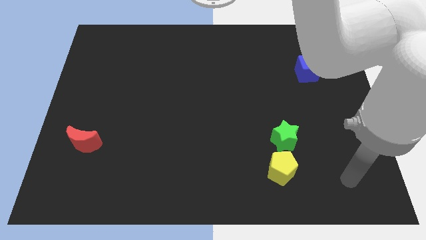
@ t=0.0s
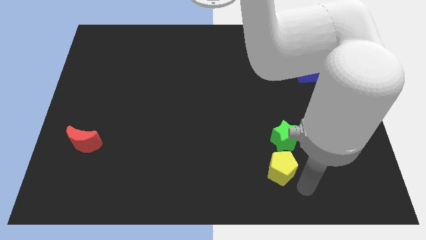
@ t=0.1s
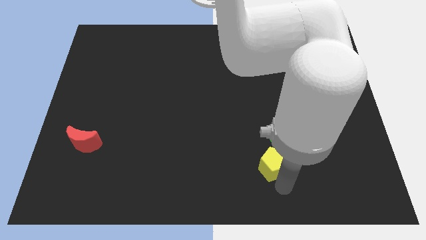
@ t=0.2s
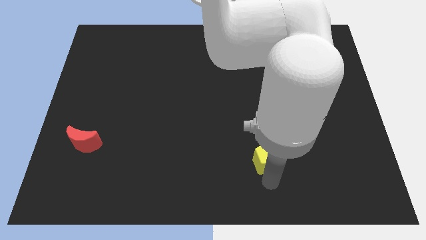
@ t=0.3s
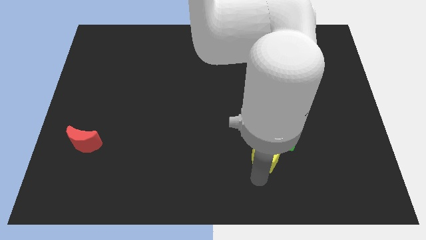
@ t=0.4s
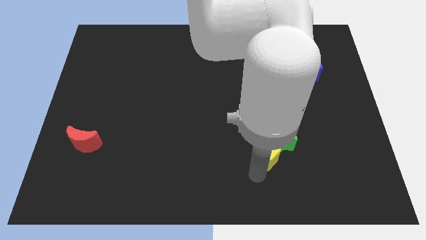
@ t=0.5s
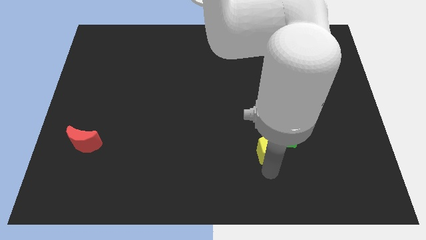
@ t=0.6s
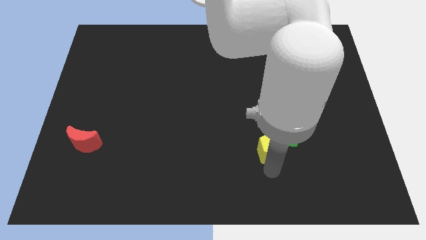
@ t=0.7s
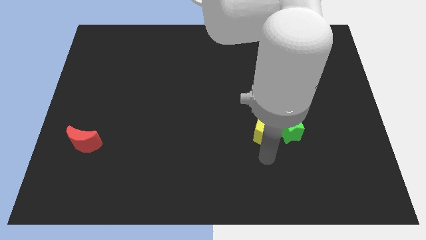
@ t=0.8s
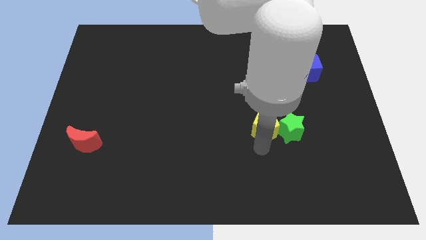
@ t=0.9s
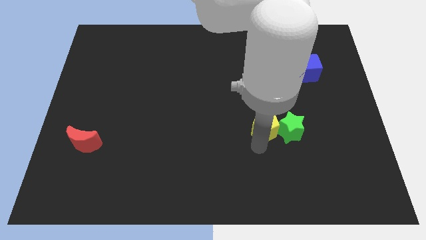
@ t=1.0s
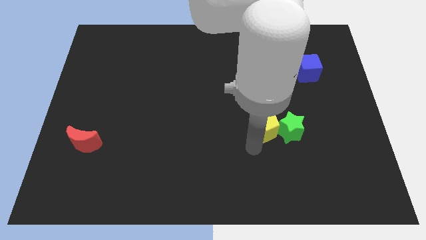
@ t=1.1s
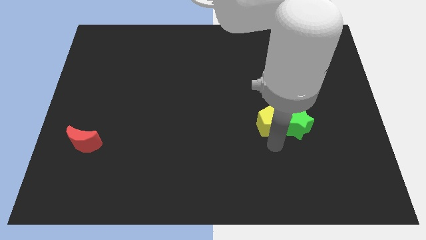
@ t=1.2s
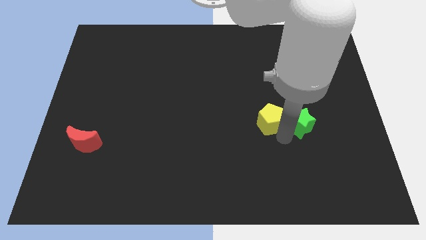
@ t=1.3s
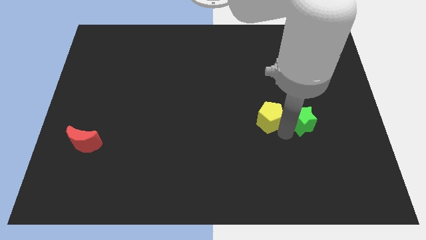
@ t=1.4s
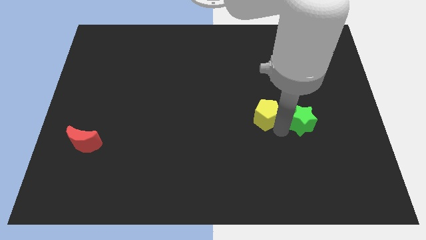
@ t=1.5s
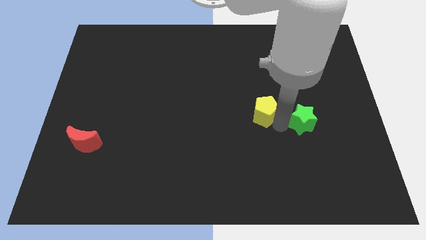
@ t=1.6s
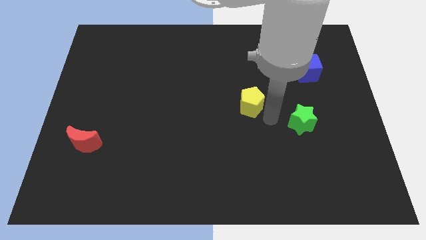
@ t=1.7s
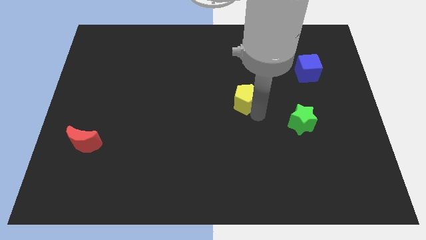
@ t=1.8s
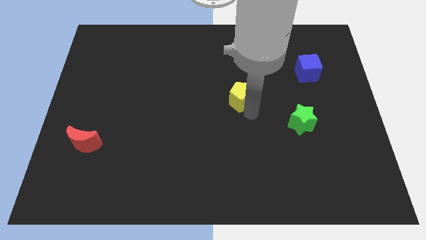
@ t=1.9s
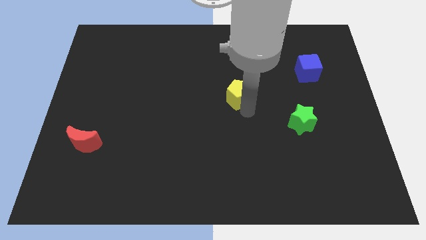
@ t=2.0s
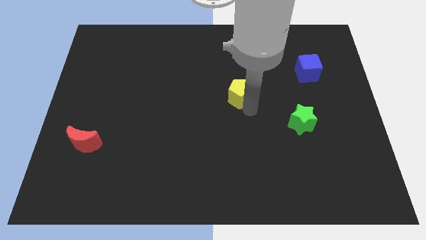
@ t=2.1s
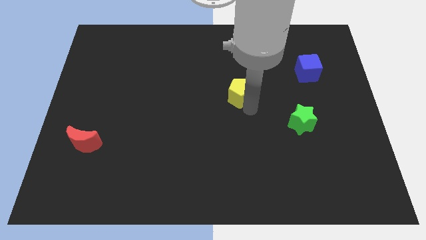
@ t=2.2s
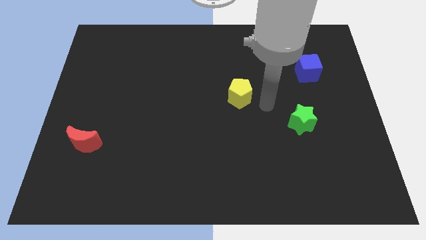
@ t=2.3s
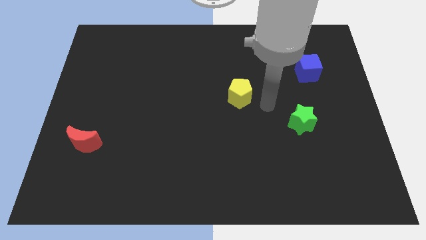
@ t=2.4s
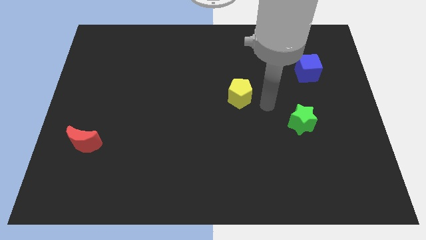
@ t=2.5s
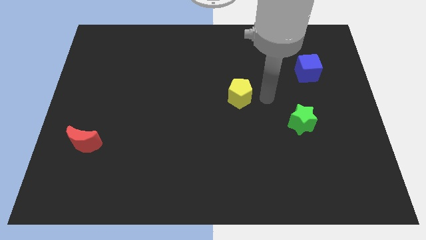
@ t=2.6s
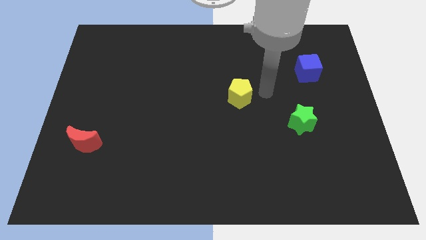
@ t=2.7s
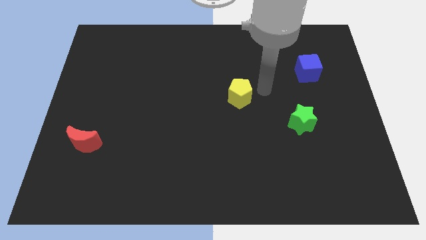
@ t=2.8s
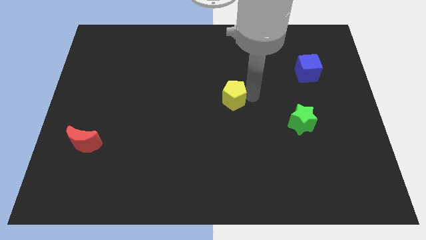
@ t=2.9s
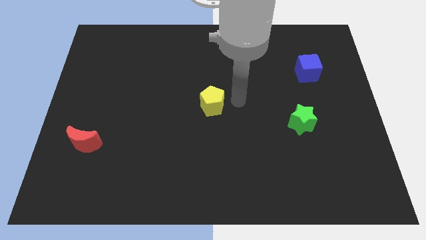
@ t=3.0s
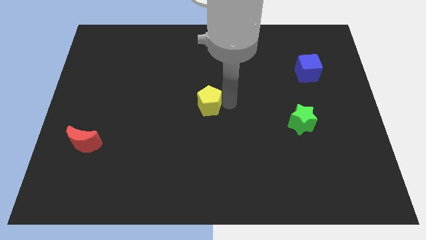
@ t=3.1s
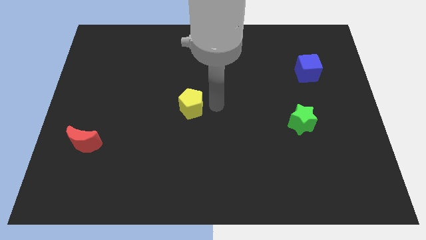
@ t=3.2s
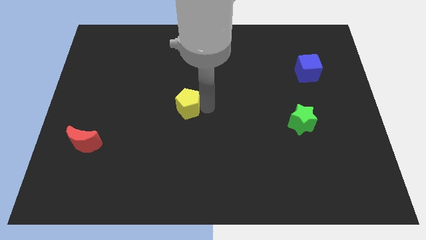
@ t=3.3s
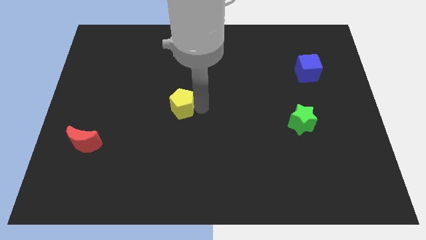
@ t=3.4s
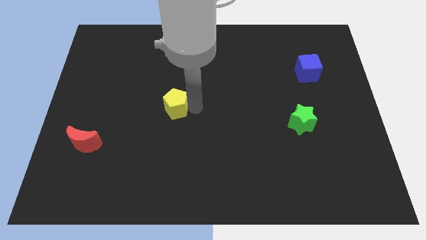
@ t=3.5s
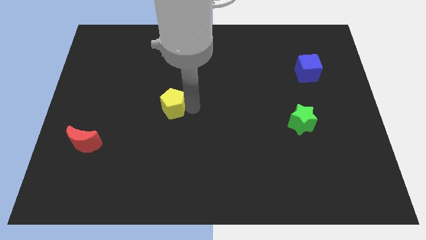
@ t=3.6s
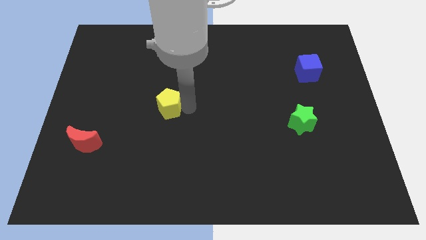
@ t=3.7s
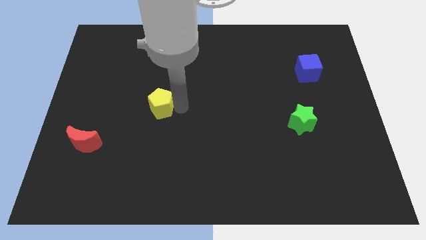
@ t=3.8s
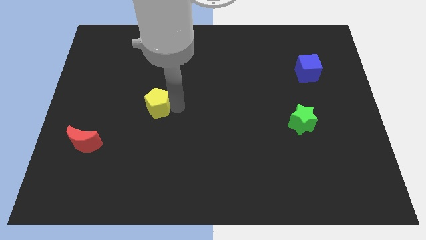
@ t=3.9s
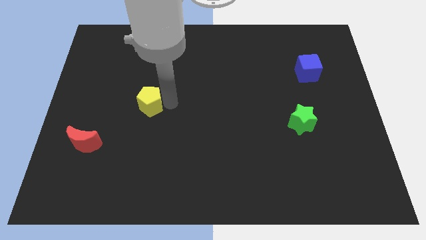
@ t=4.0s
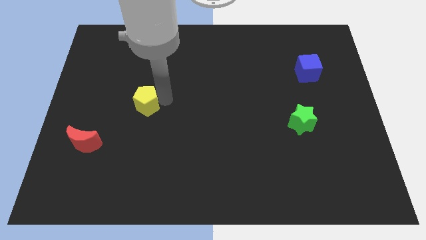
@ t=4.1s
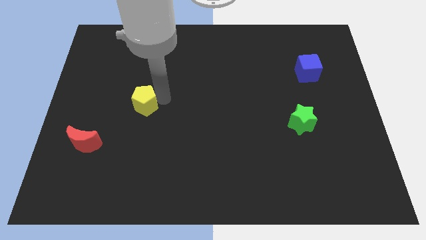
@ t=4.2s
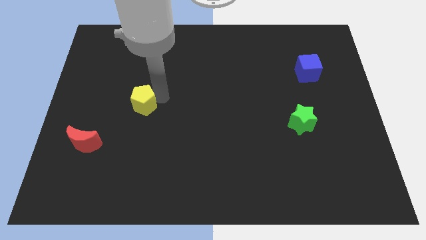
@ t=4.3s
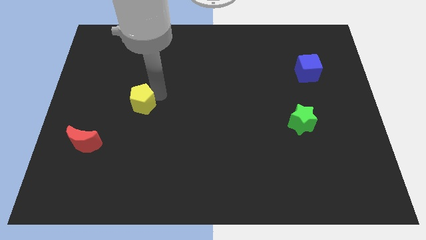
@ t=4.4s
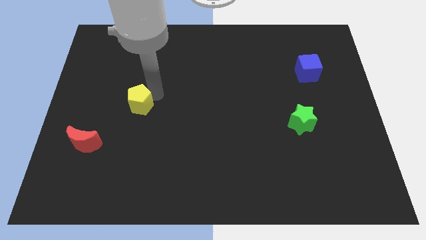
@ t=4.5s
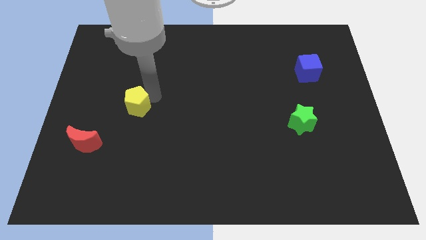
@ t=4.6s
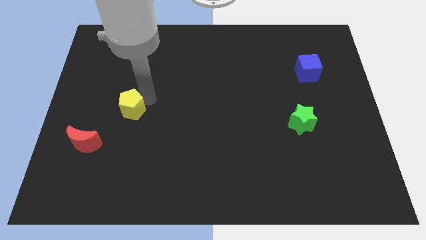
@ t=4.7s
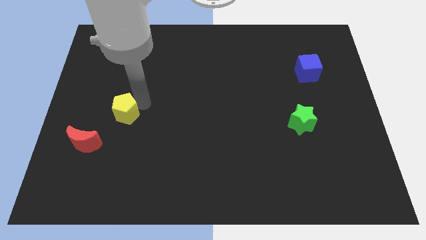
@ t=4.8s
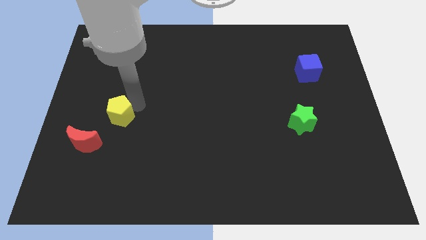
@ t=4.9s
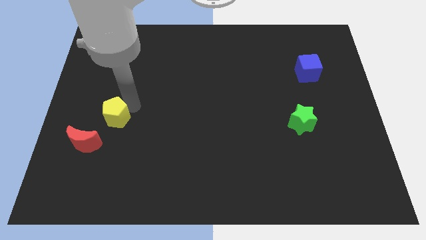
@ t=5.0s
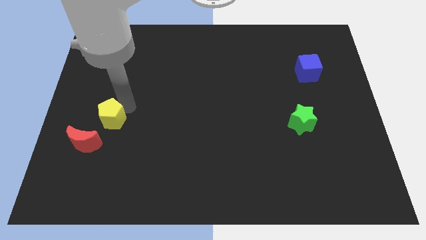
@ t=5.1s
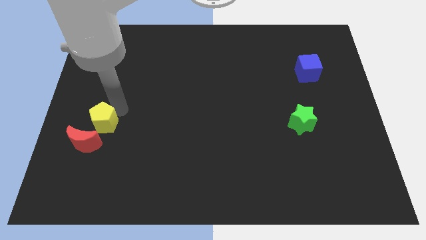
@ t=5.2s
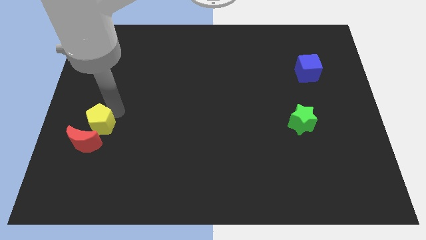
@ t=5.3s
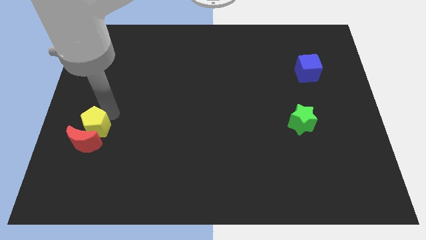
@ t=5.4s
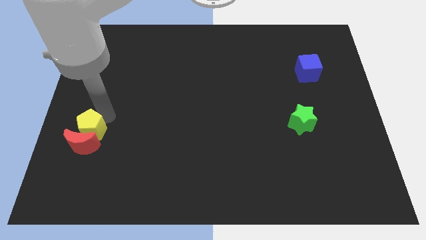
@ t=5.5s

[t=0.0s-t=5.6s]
move the yellow block towards the red block

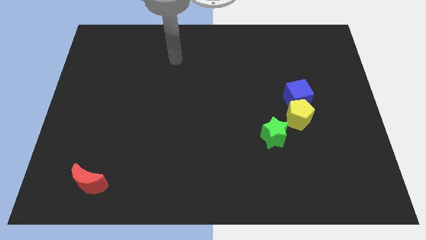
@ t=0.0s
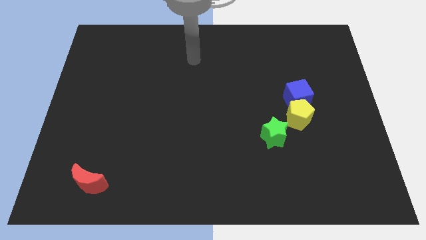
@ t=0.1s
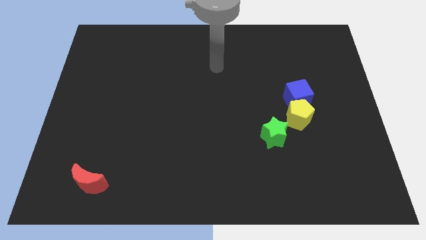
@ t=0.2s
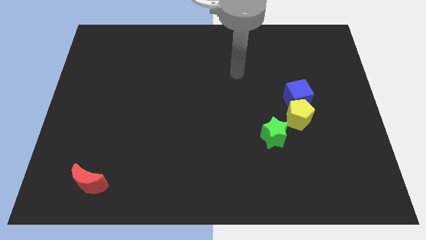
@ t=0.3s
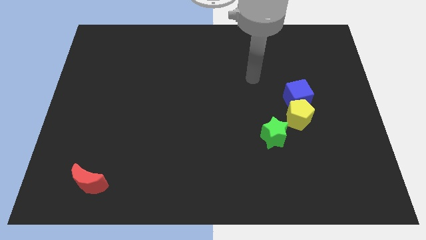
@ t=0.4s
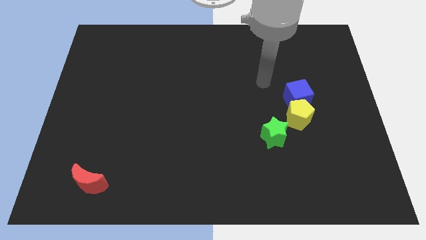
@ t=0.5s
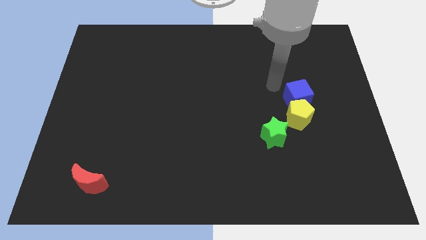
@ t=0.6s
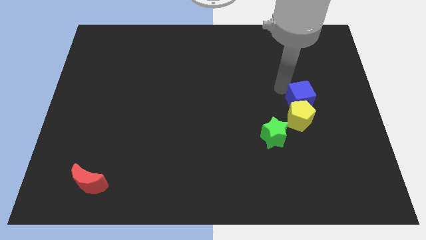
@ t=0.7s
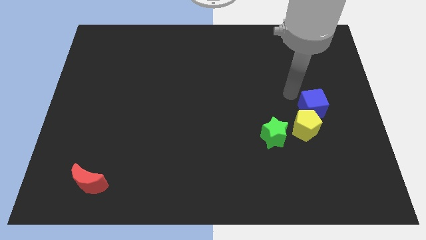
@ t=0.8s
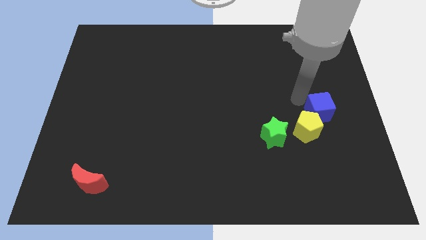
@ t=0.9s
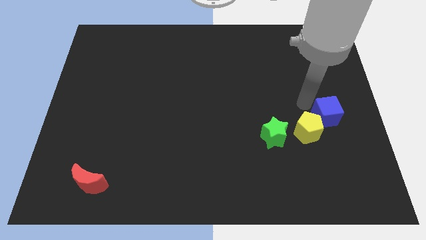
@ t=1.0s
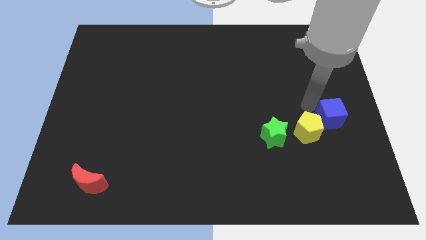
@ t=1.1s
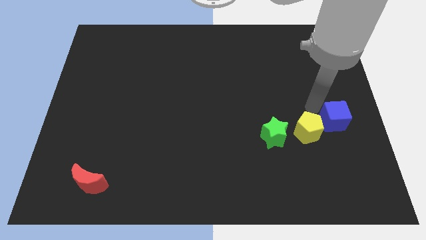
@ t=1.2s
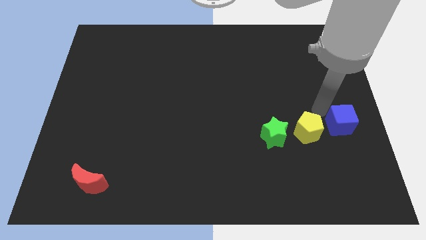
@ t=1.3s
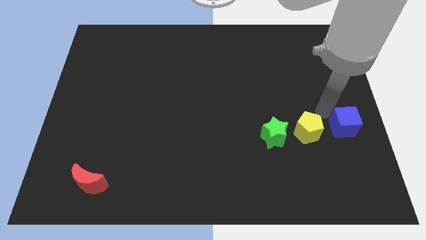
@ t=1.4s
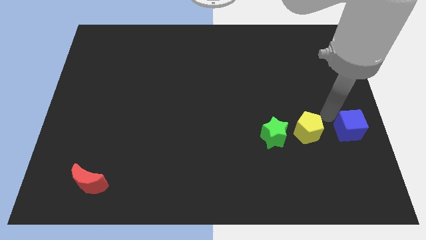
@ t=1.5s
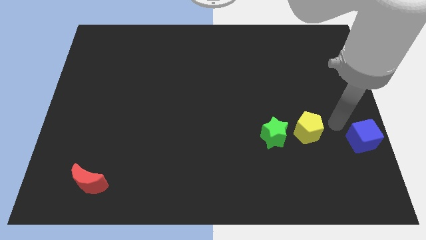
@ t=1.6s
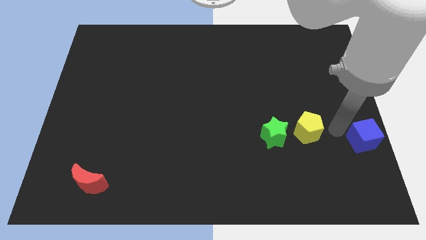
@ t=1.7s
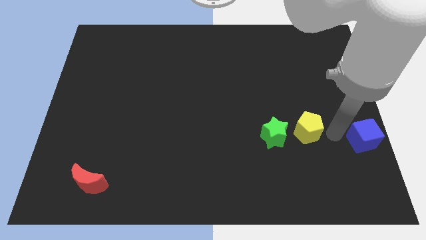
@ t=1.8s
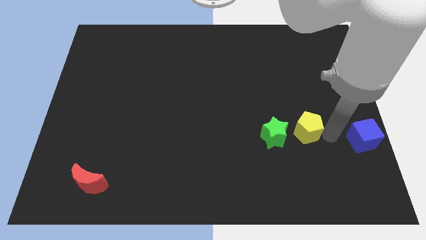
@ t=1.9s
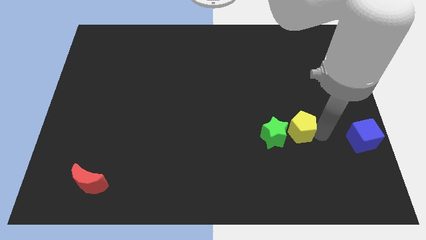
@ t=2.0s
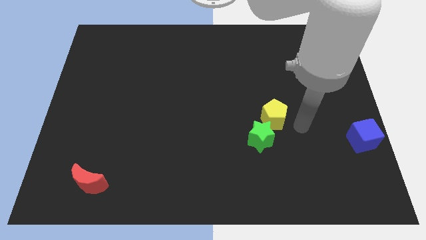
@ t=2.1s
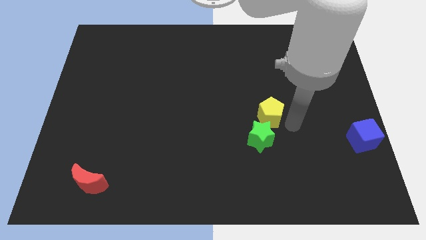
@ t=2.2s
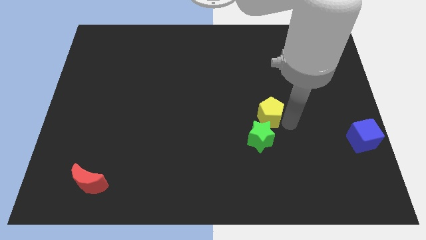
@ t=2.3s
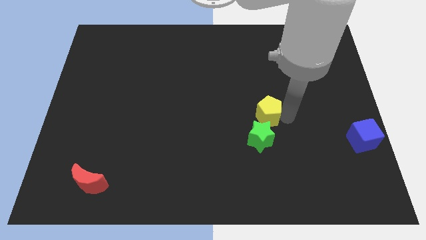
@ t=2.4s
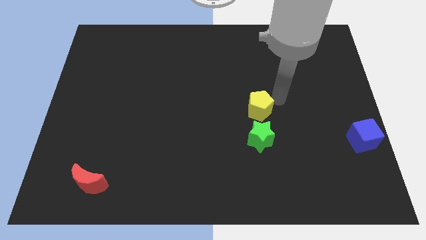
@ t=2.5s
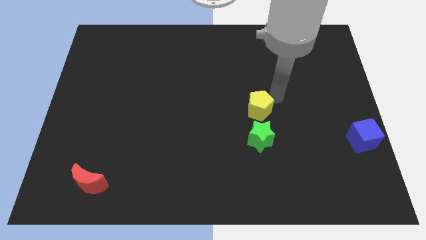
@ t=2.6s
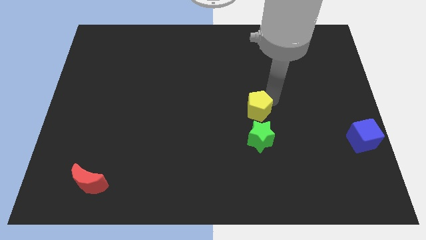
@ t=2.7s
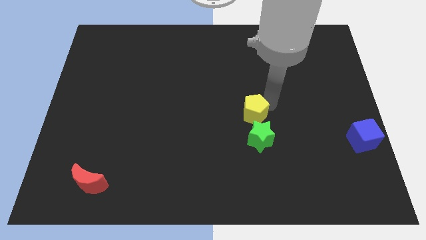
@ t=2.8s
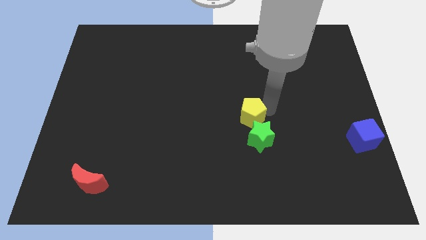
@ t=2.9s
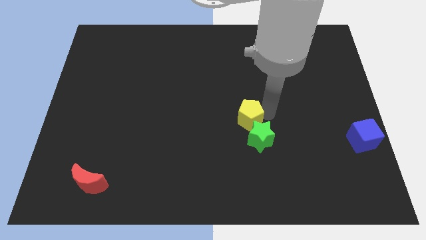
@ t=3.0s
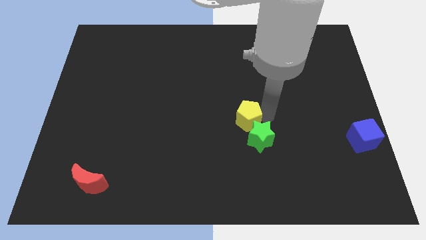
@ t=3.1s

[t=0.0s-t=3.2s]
push the pentagon towards the green block
